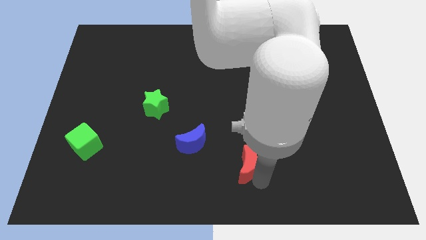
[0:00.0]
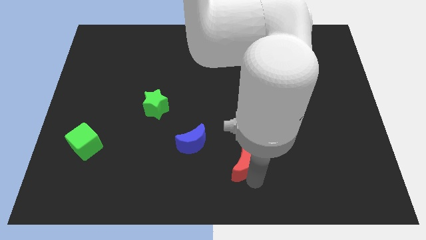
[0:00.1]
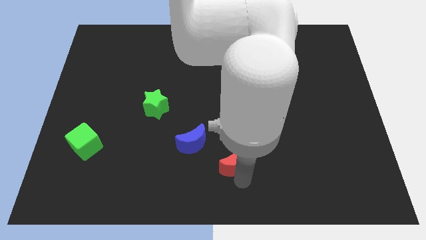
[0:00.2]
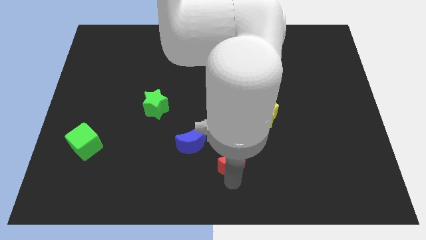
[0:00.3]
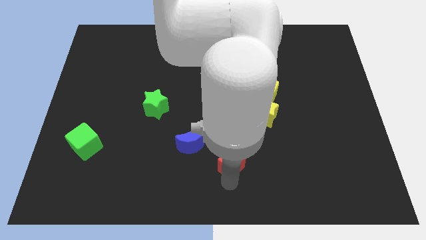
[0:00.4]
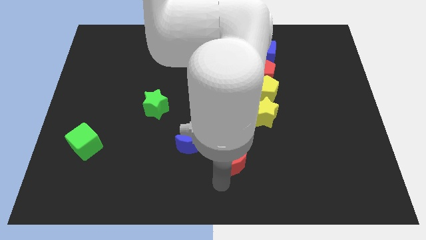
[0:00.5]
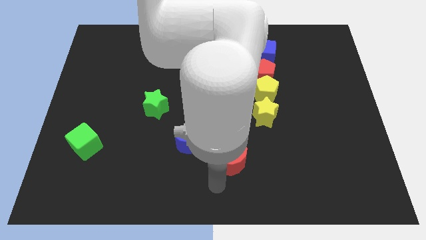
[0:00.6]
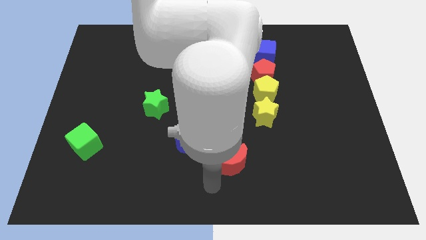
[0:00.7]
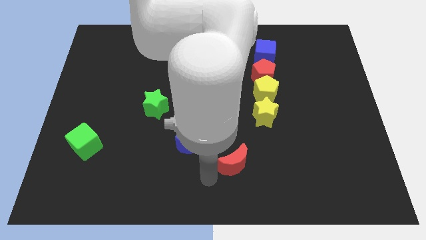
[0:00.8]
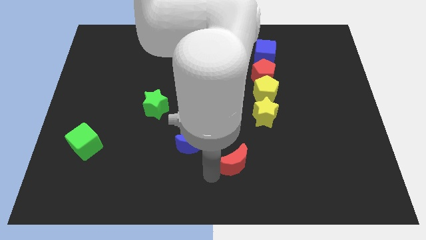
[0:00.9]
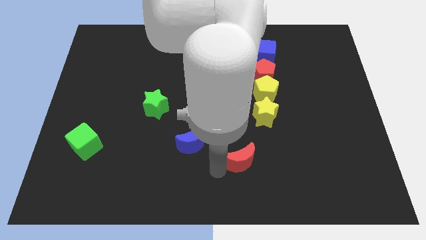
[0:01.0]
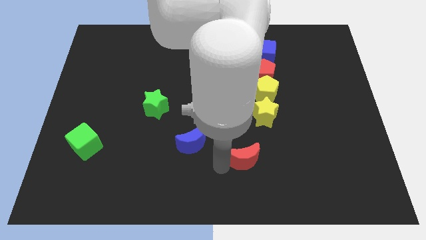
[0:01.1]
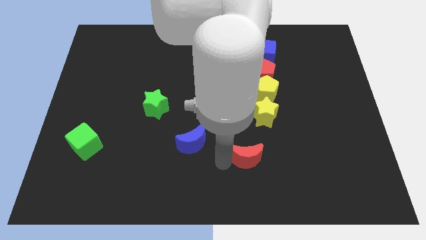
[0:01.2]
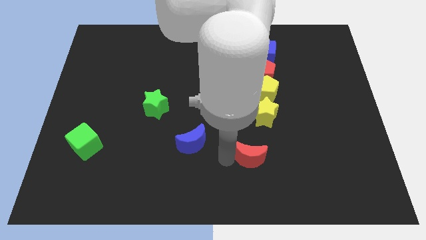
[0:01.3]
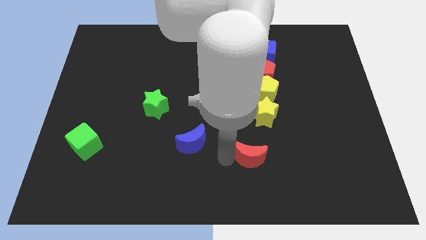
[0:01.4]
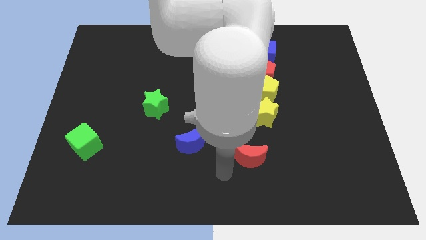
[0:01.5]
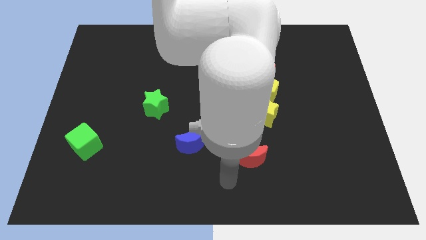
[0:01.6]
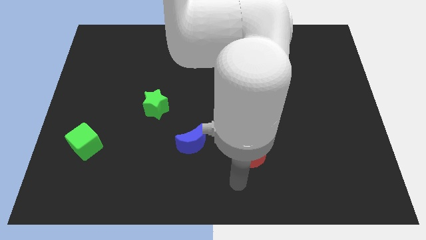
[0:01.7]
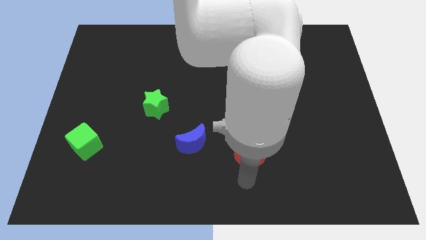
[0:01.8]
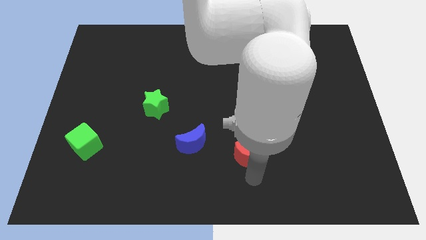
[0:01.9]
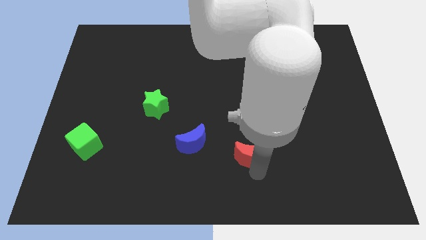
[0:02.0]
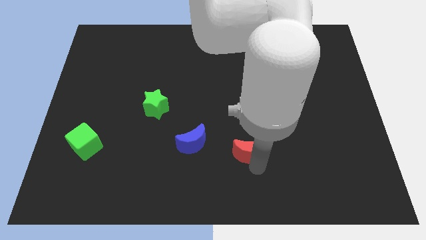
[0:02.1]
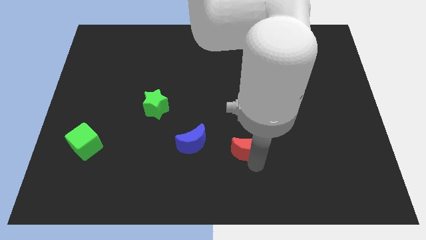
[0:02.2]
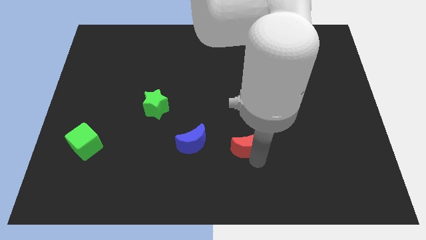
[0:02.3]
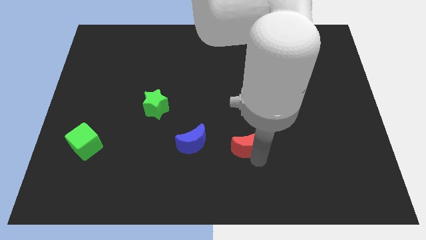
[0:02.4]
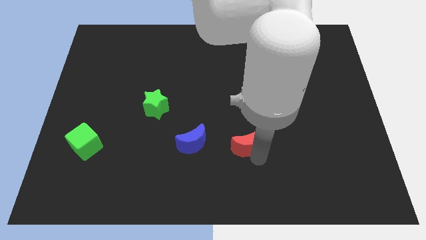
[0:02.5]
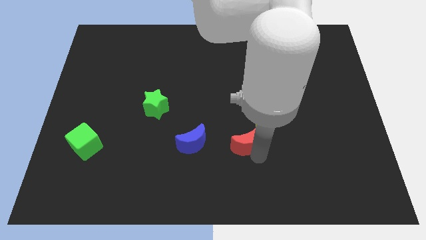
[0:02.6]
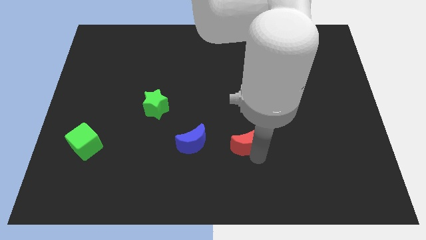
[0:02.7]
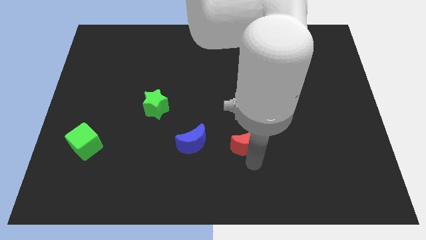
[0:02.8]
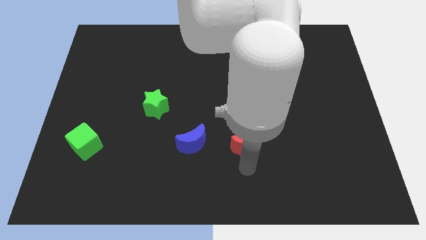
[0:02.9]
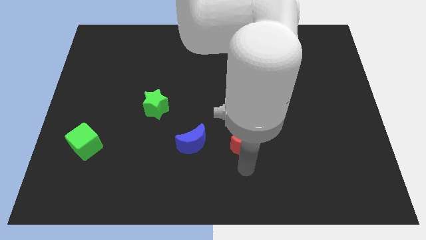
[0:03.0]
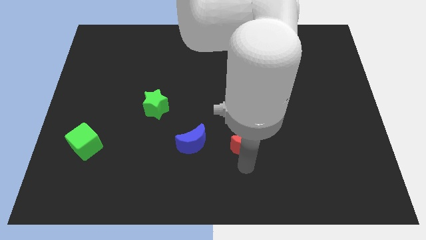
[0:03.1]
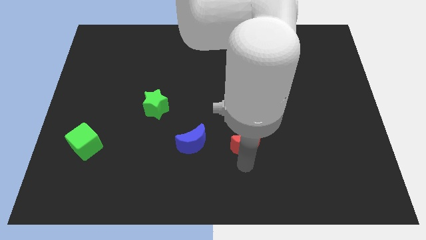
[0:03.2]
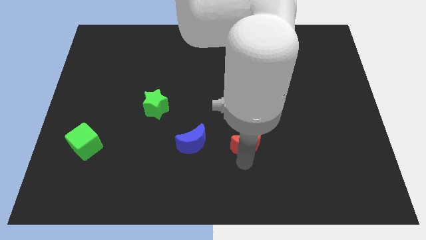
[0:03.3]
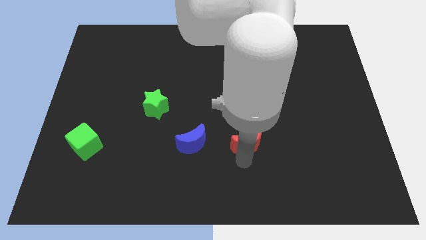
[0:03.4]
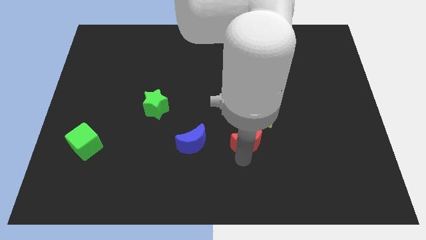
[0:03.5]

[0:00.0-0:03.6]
place the red moon right to the blue moon

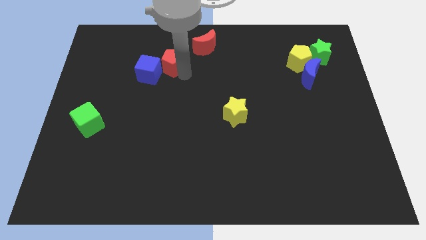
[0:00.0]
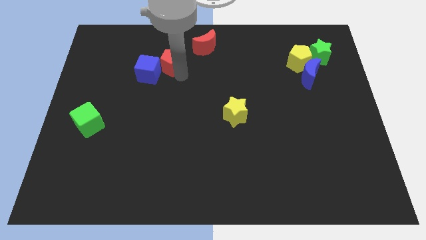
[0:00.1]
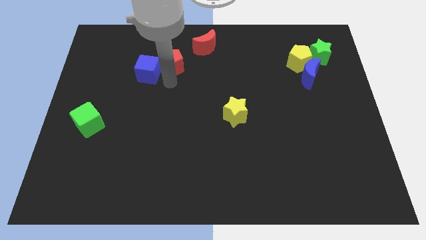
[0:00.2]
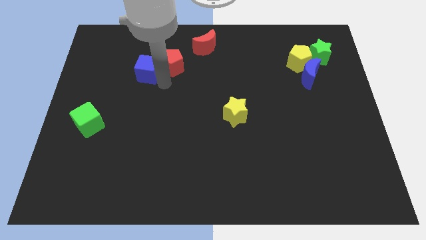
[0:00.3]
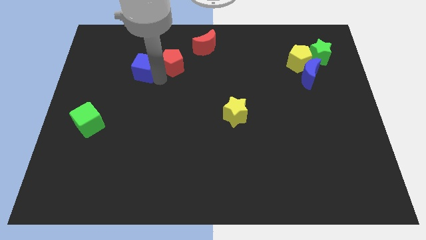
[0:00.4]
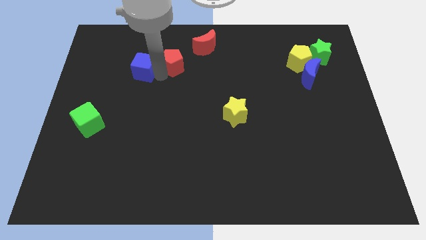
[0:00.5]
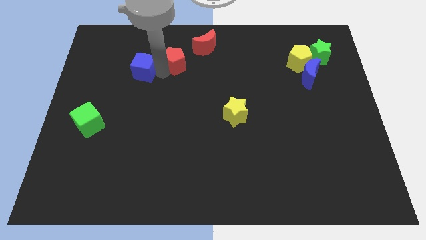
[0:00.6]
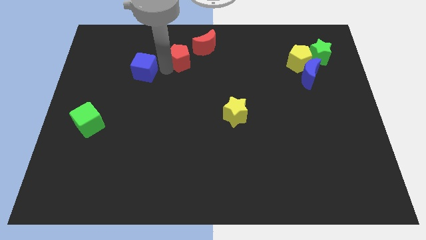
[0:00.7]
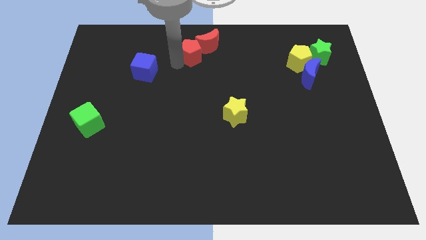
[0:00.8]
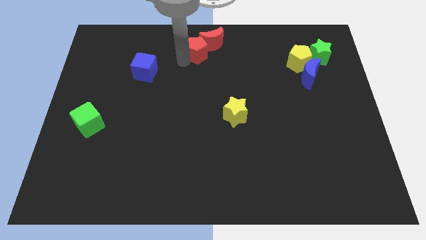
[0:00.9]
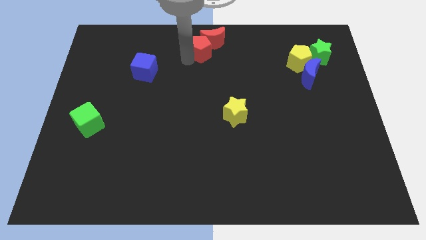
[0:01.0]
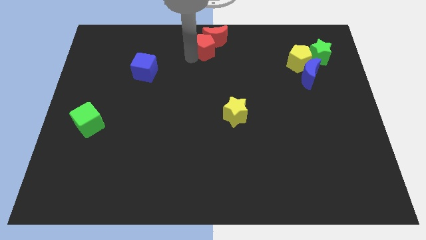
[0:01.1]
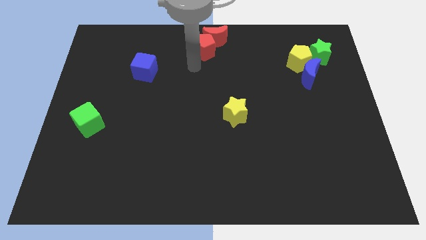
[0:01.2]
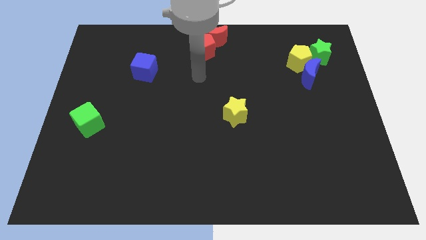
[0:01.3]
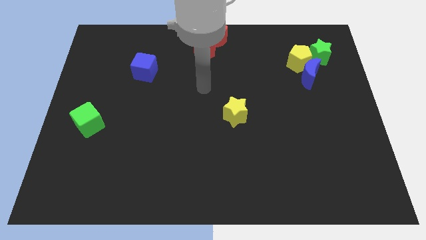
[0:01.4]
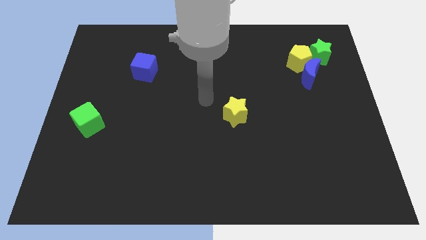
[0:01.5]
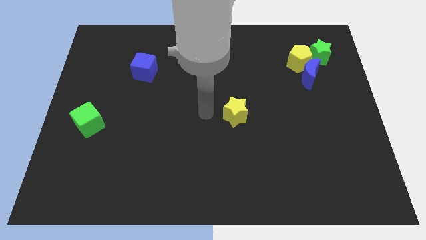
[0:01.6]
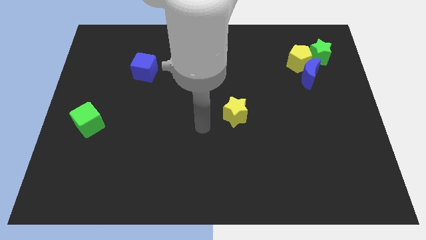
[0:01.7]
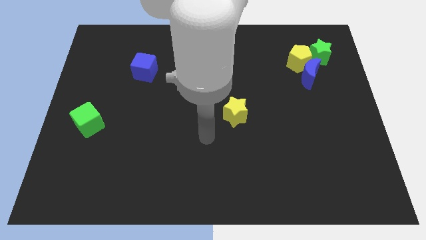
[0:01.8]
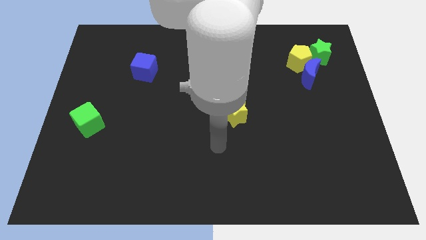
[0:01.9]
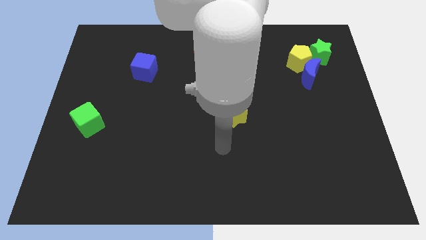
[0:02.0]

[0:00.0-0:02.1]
place red pentagon and red crescent at the top center of the board

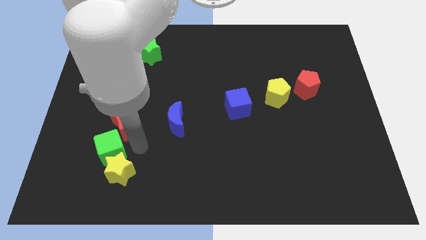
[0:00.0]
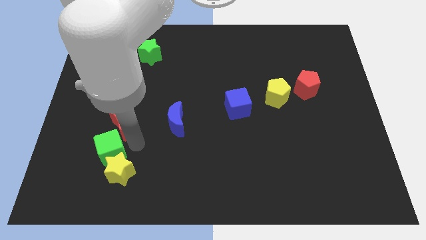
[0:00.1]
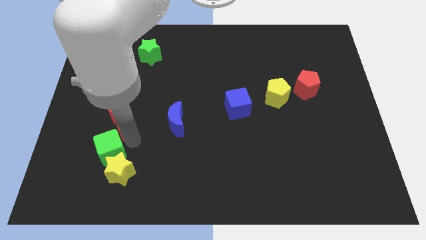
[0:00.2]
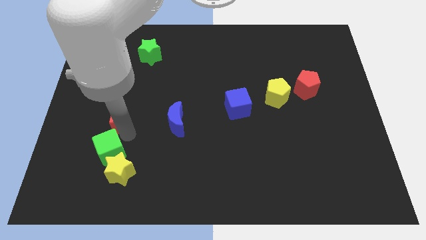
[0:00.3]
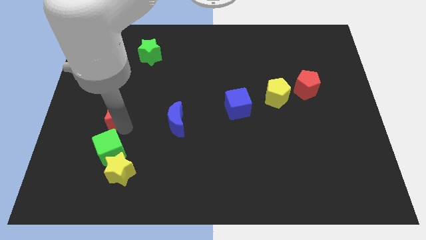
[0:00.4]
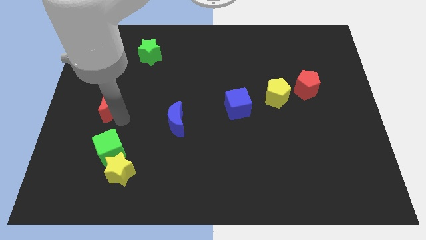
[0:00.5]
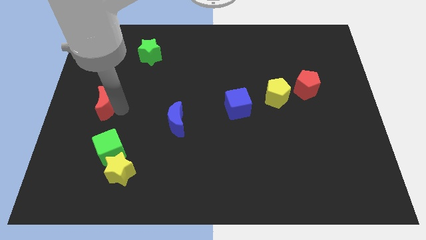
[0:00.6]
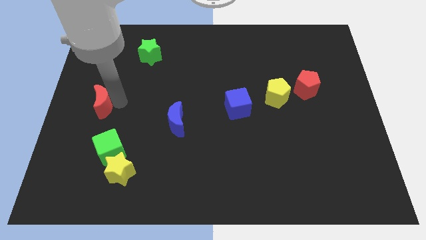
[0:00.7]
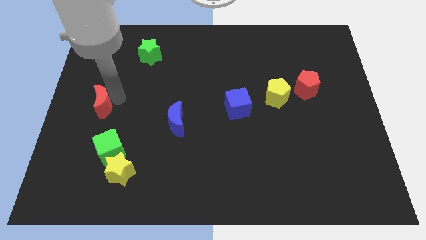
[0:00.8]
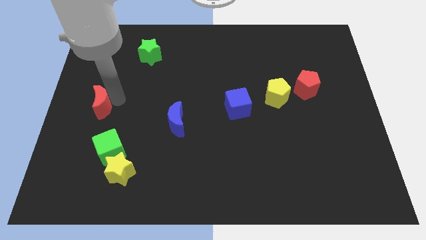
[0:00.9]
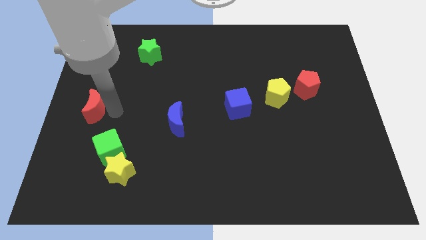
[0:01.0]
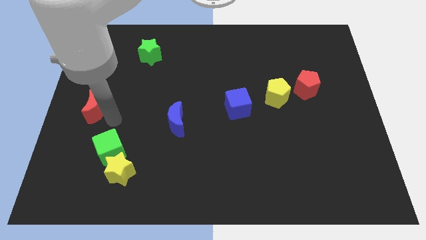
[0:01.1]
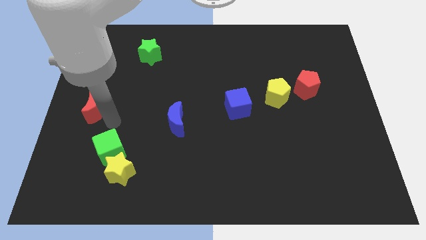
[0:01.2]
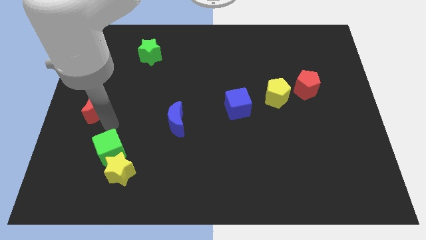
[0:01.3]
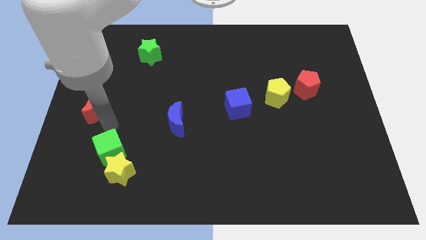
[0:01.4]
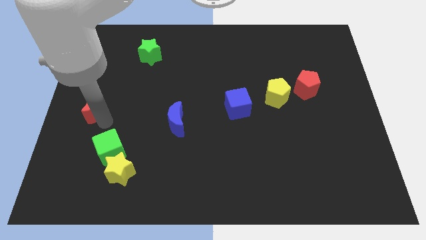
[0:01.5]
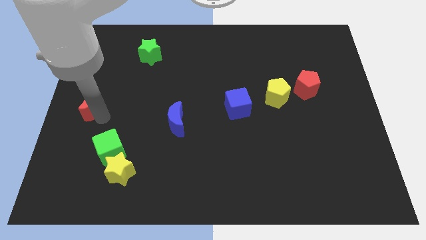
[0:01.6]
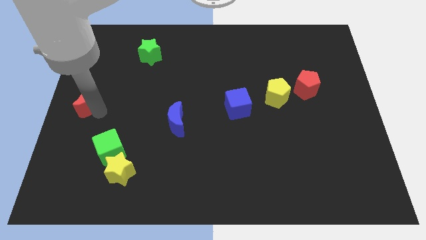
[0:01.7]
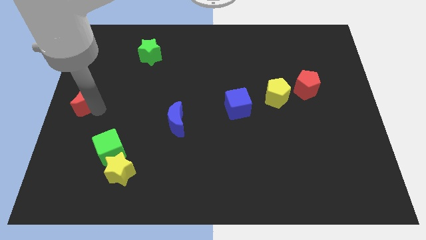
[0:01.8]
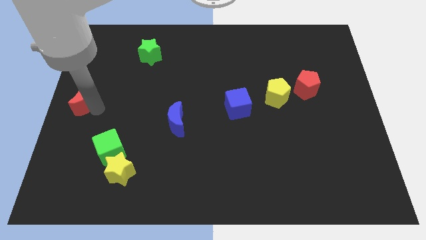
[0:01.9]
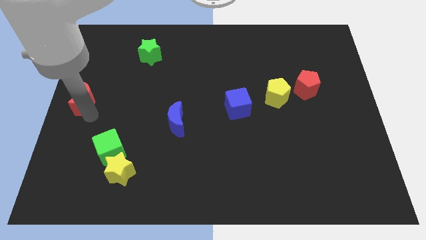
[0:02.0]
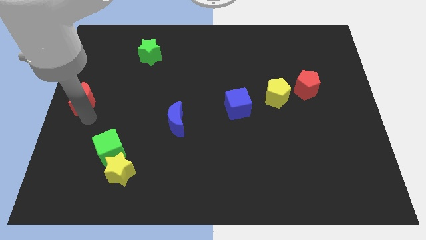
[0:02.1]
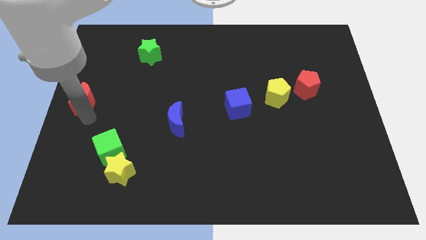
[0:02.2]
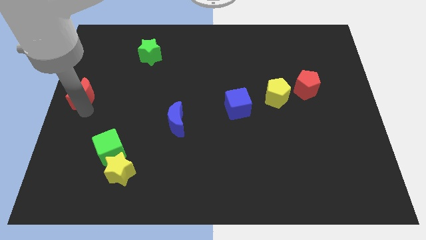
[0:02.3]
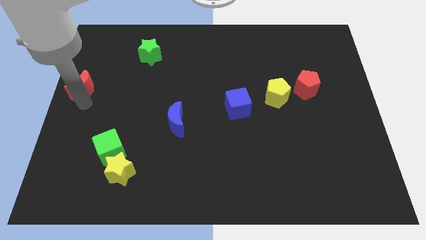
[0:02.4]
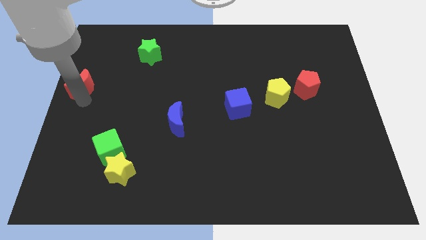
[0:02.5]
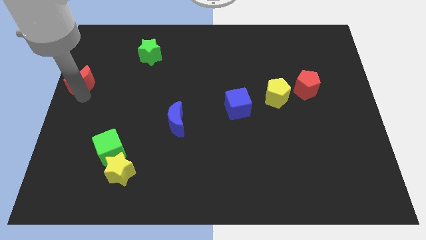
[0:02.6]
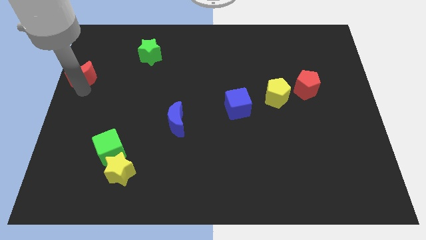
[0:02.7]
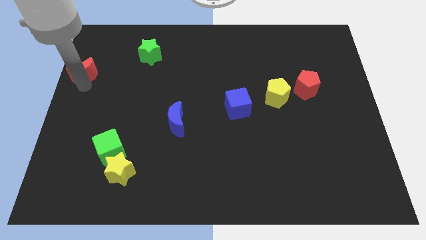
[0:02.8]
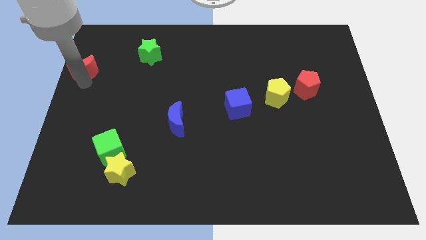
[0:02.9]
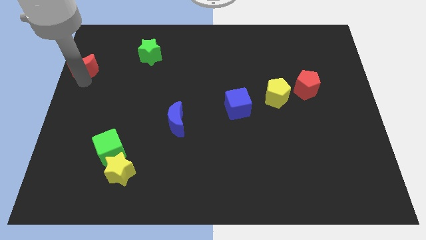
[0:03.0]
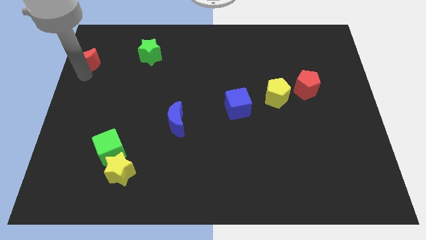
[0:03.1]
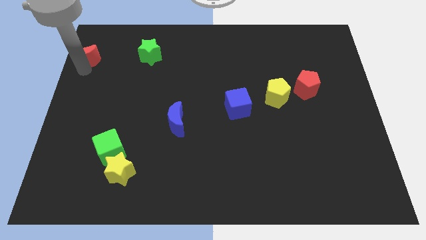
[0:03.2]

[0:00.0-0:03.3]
push red crescent beside green star
